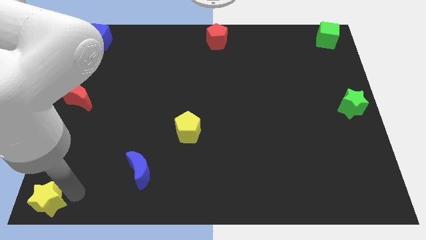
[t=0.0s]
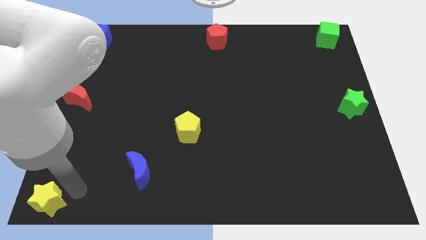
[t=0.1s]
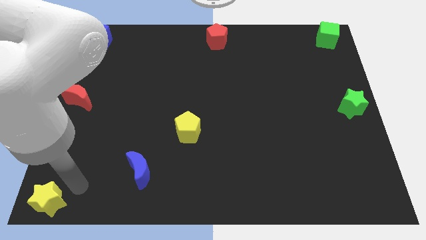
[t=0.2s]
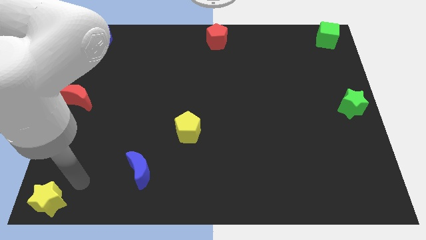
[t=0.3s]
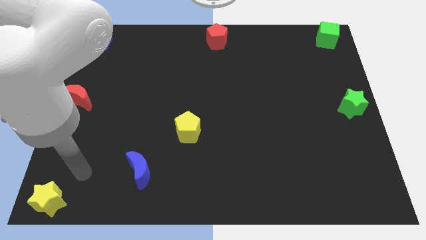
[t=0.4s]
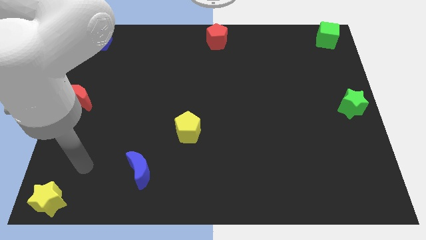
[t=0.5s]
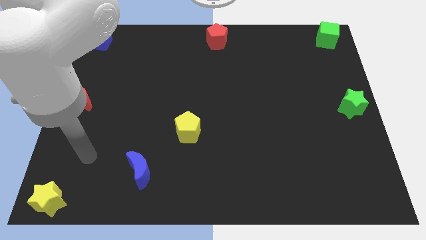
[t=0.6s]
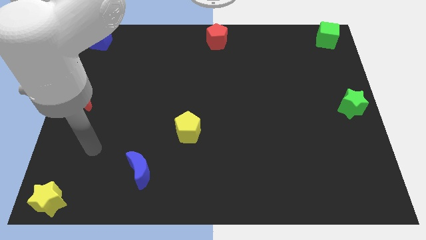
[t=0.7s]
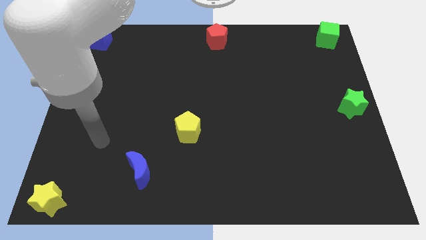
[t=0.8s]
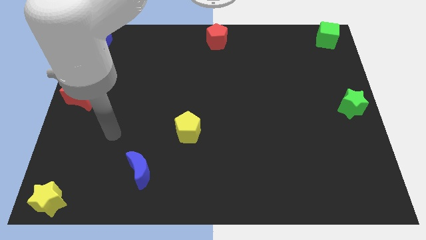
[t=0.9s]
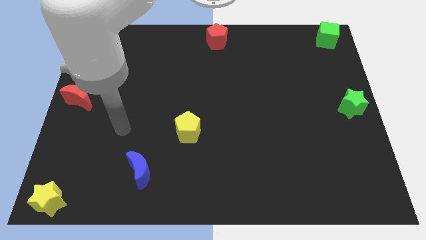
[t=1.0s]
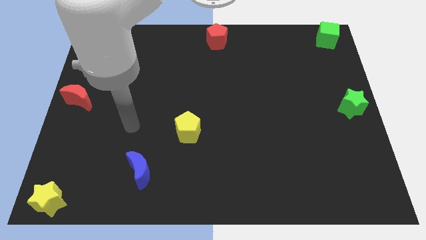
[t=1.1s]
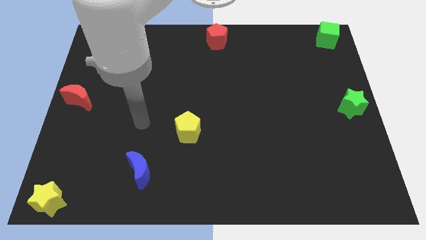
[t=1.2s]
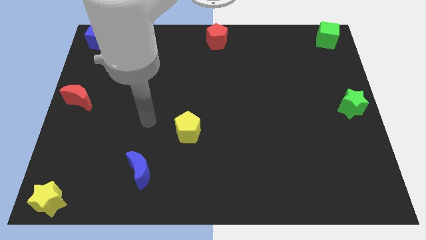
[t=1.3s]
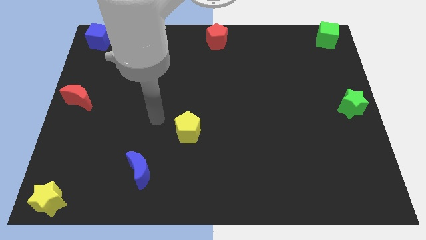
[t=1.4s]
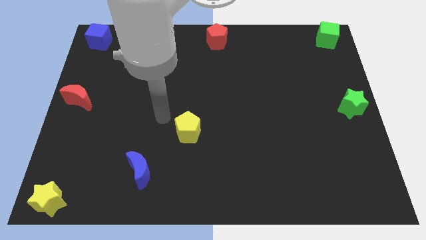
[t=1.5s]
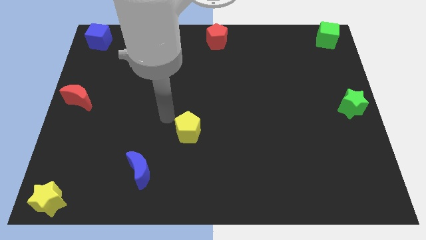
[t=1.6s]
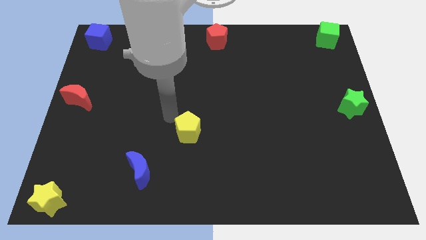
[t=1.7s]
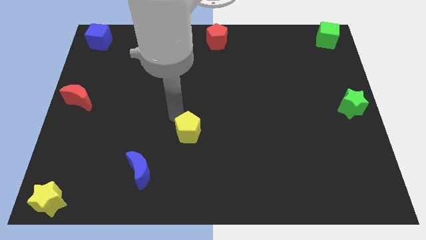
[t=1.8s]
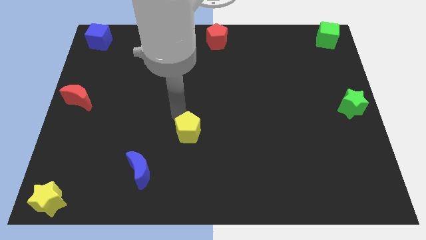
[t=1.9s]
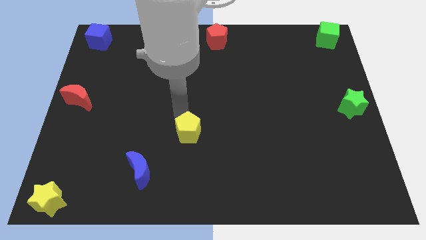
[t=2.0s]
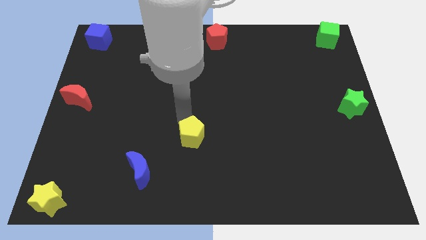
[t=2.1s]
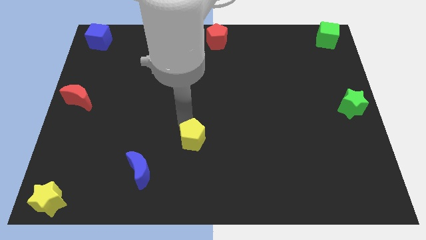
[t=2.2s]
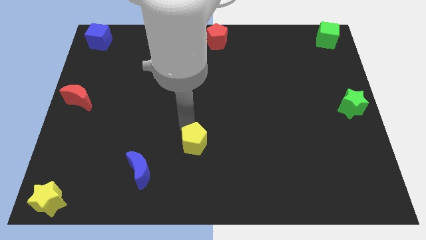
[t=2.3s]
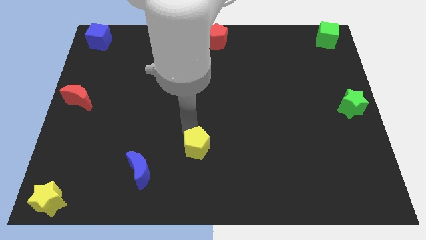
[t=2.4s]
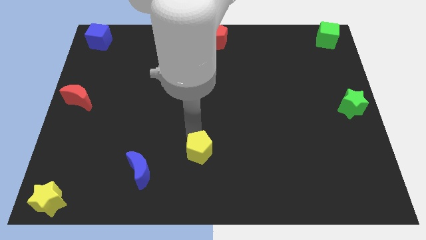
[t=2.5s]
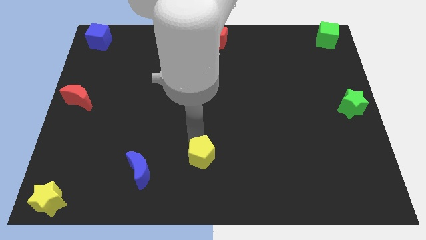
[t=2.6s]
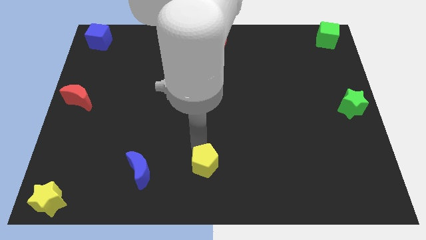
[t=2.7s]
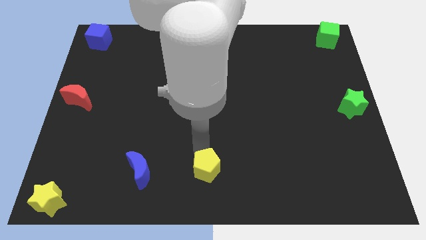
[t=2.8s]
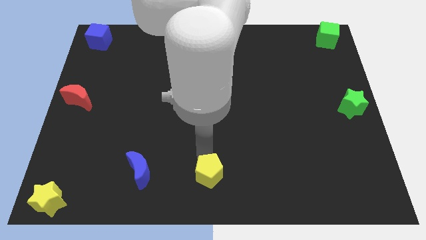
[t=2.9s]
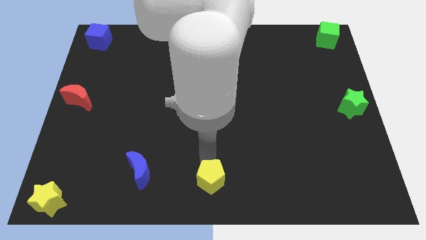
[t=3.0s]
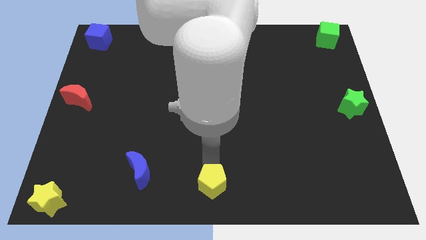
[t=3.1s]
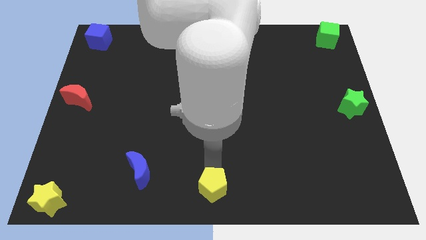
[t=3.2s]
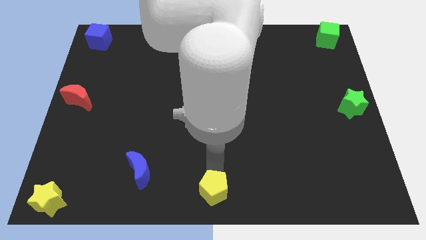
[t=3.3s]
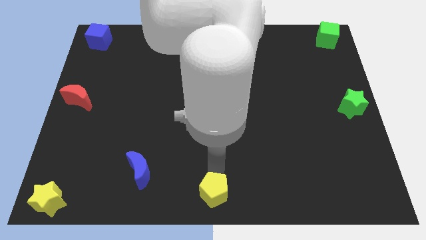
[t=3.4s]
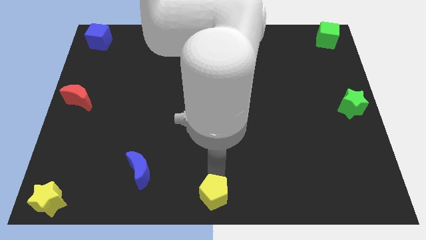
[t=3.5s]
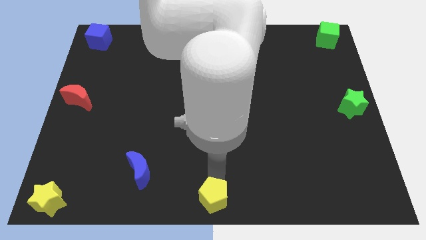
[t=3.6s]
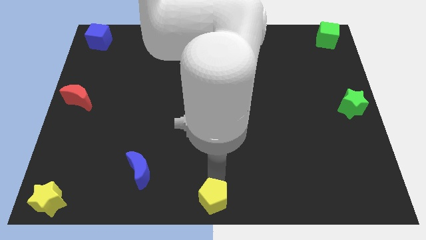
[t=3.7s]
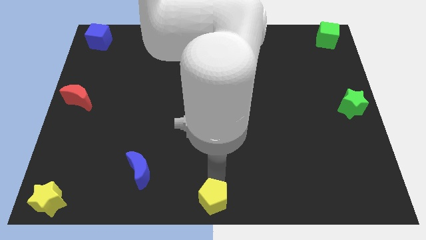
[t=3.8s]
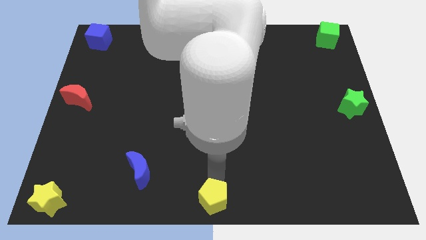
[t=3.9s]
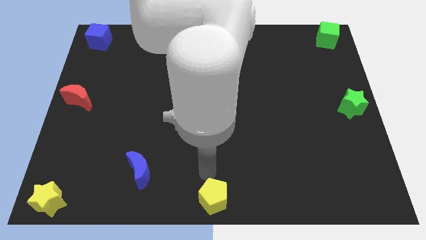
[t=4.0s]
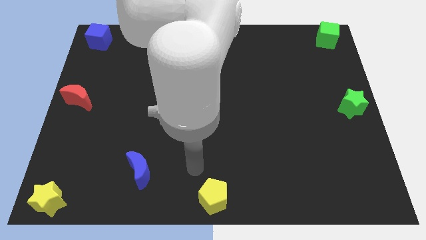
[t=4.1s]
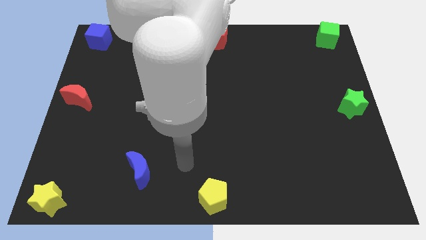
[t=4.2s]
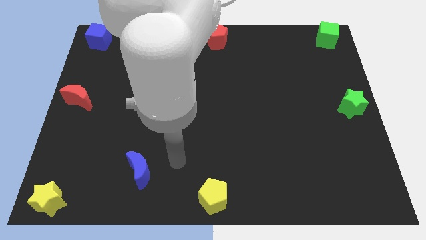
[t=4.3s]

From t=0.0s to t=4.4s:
push the yellow pentagon to the bottom center of the board

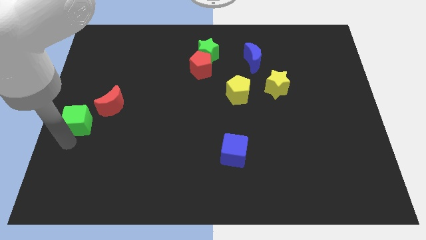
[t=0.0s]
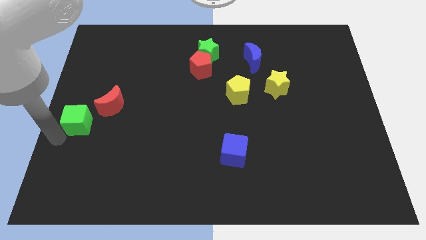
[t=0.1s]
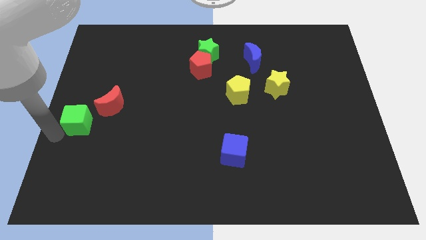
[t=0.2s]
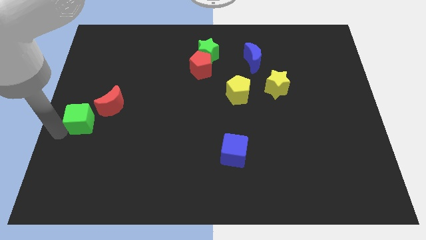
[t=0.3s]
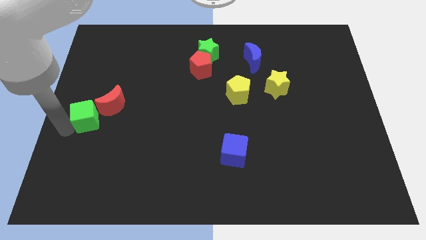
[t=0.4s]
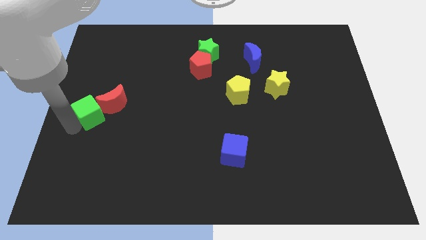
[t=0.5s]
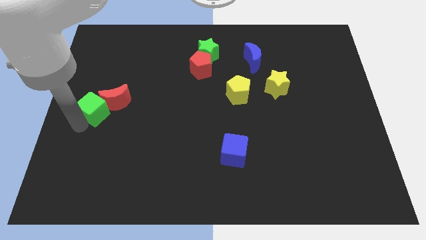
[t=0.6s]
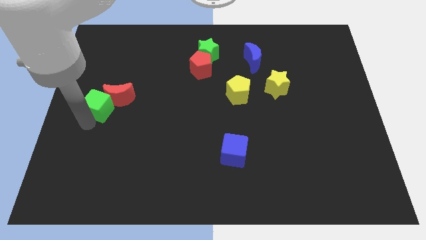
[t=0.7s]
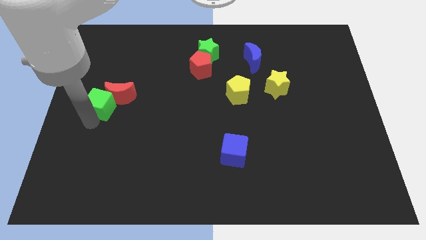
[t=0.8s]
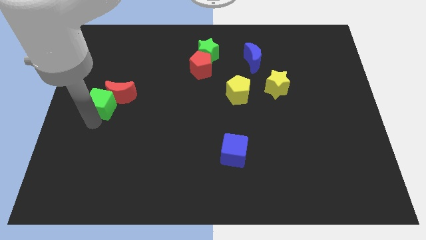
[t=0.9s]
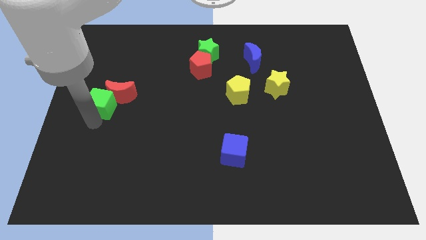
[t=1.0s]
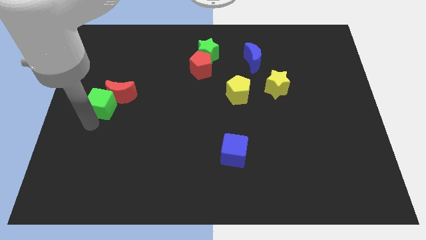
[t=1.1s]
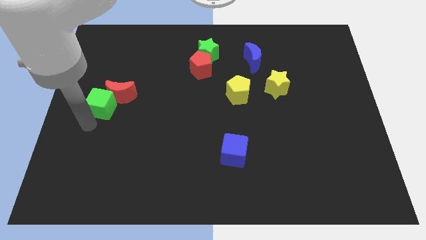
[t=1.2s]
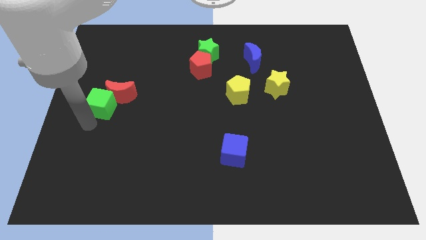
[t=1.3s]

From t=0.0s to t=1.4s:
place green cube at the bottom of red crescent

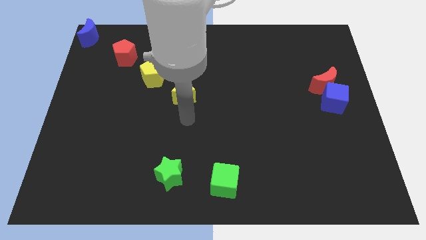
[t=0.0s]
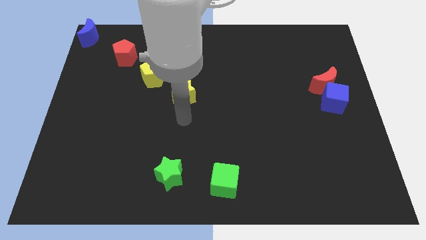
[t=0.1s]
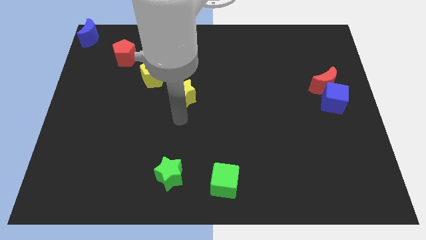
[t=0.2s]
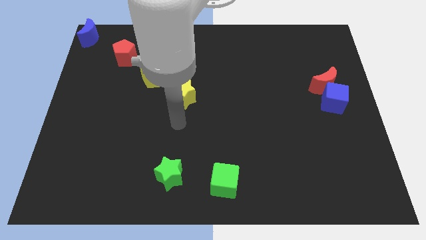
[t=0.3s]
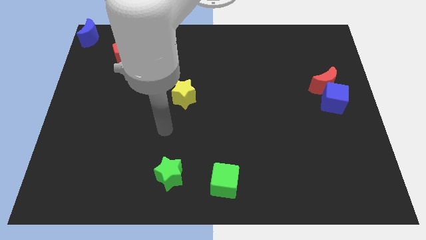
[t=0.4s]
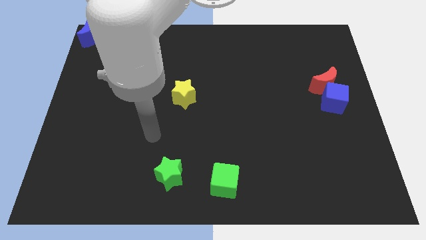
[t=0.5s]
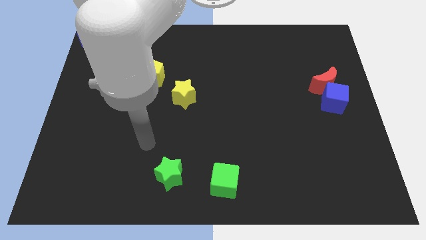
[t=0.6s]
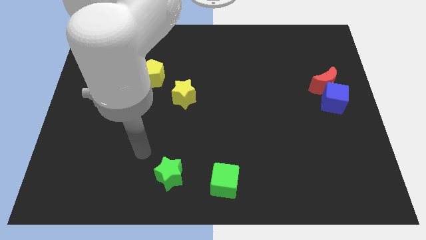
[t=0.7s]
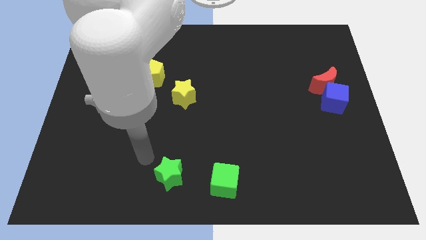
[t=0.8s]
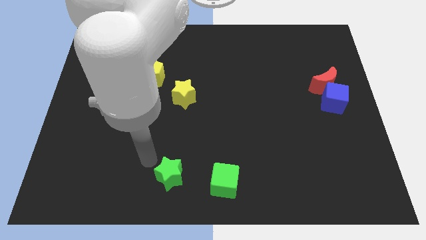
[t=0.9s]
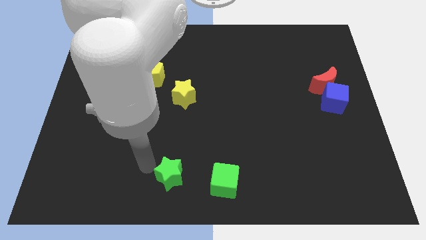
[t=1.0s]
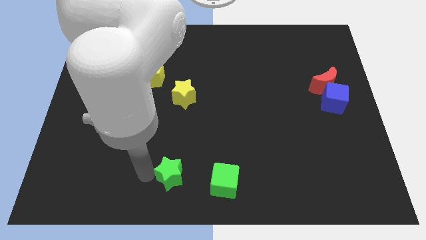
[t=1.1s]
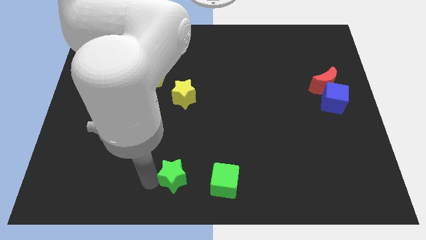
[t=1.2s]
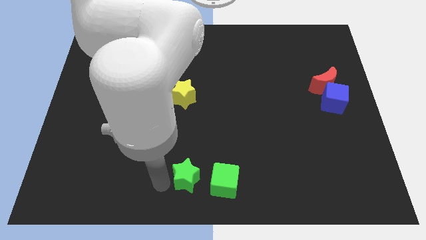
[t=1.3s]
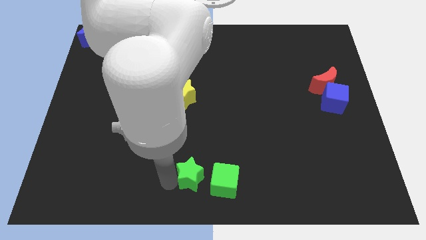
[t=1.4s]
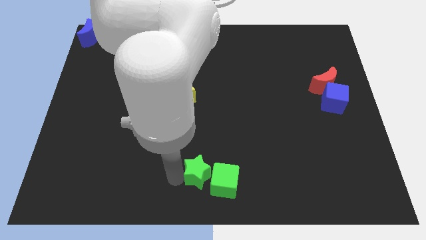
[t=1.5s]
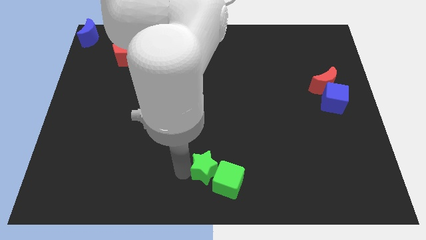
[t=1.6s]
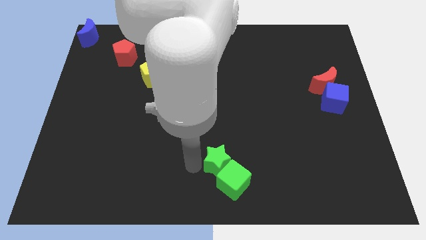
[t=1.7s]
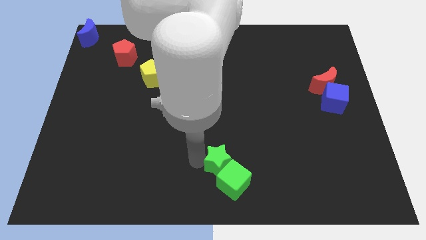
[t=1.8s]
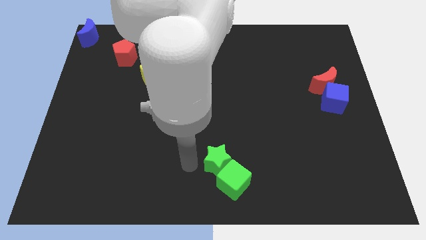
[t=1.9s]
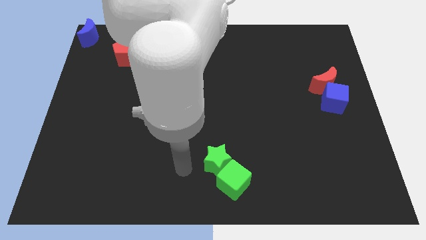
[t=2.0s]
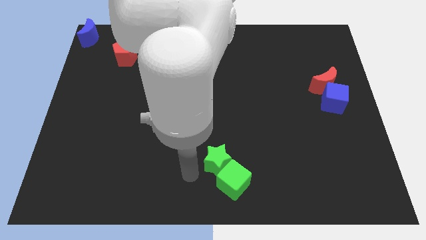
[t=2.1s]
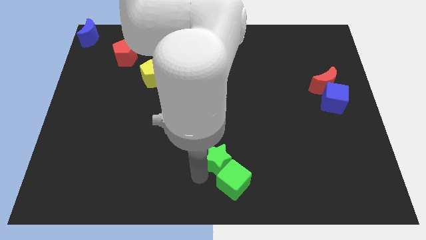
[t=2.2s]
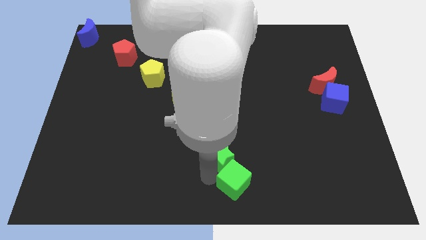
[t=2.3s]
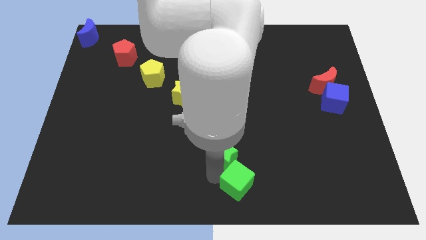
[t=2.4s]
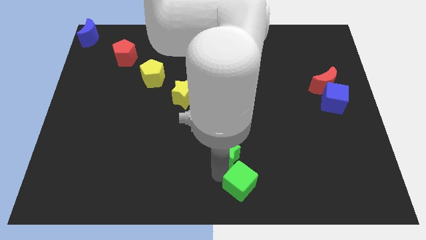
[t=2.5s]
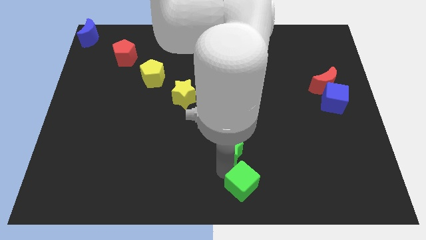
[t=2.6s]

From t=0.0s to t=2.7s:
push the green star into the green cube

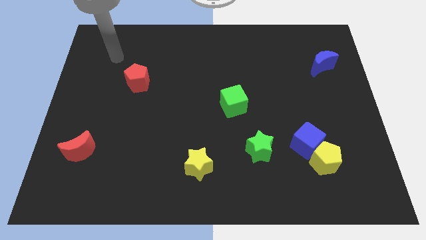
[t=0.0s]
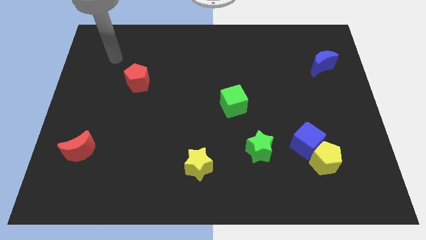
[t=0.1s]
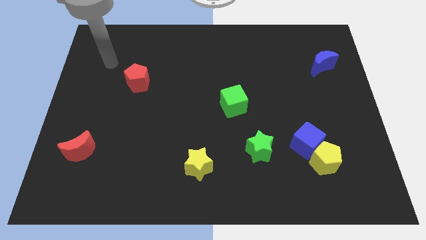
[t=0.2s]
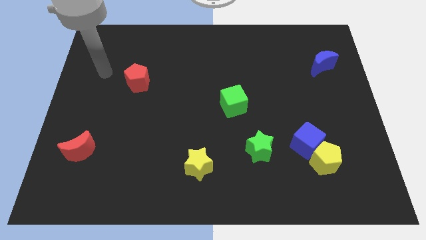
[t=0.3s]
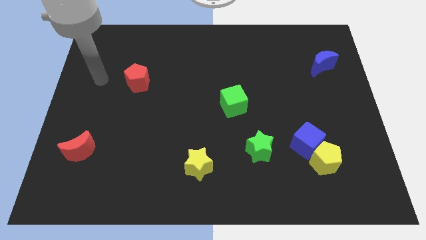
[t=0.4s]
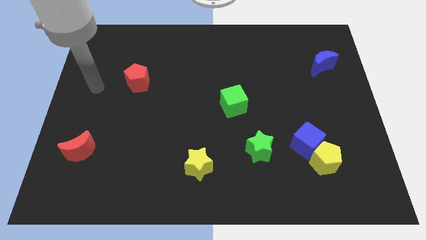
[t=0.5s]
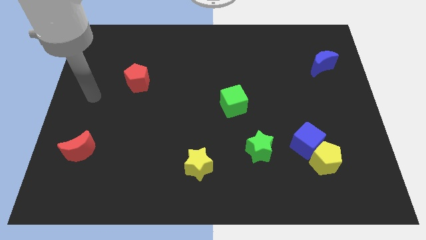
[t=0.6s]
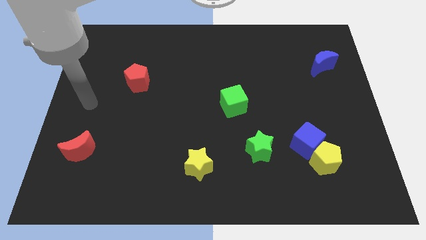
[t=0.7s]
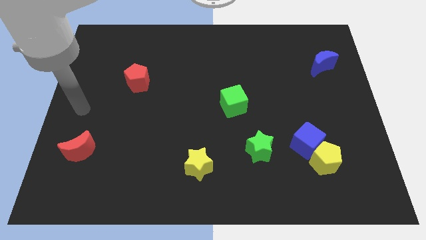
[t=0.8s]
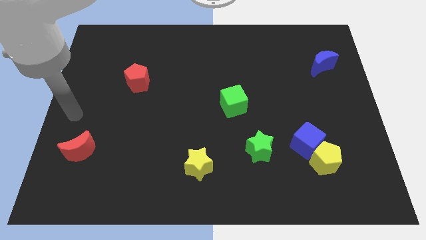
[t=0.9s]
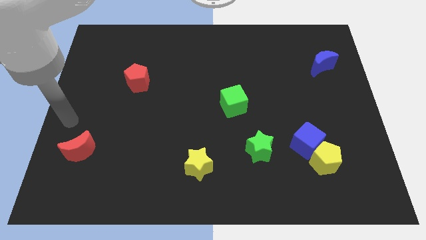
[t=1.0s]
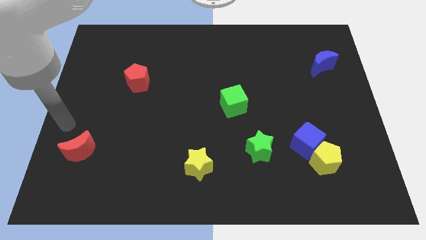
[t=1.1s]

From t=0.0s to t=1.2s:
put your hand vertically above the red moon
